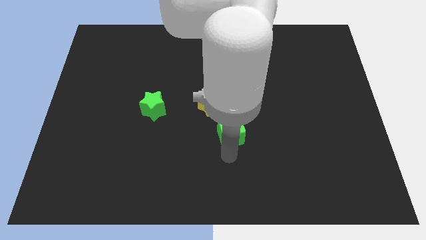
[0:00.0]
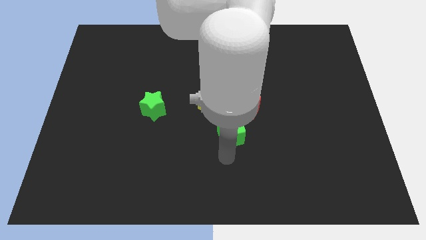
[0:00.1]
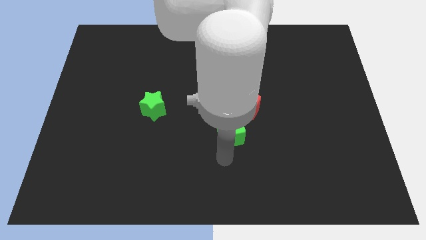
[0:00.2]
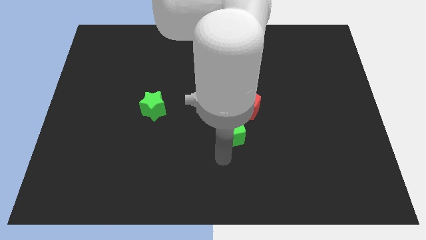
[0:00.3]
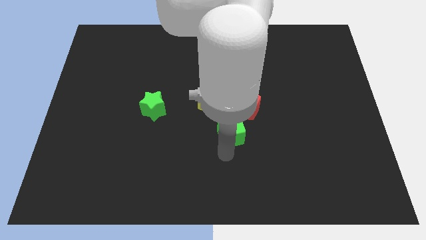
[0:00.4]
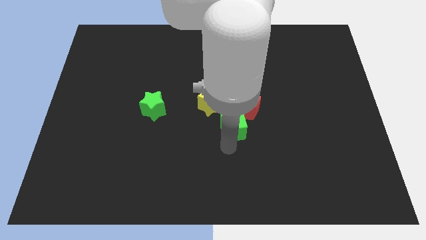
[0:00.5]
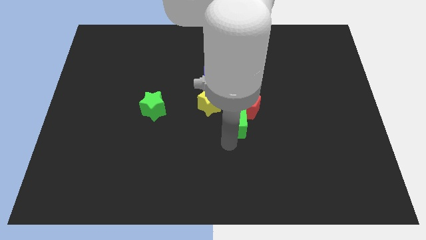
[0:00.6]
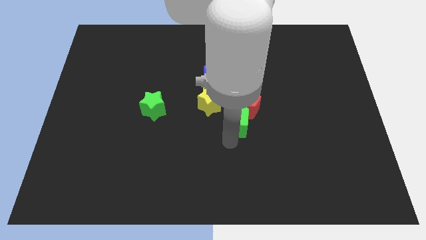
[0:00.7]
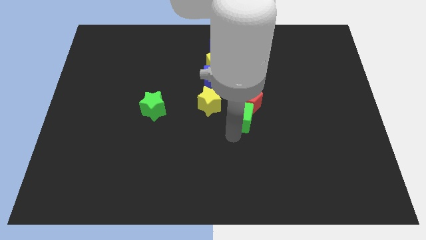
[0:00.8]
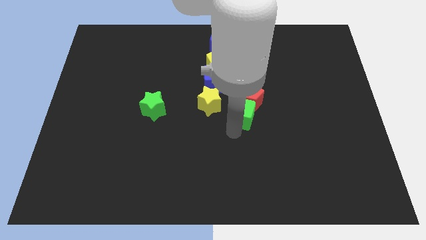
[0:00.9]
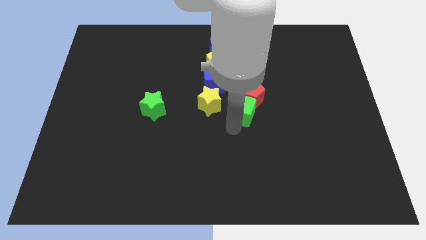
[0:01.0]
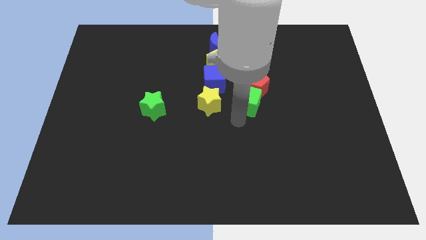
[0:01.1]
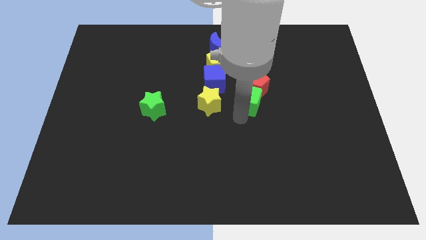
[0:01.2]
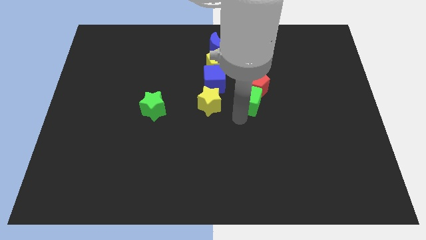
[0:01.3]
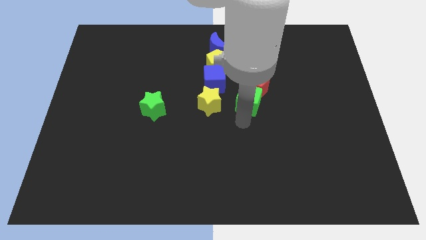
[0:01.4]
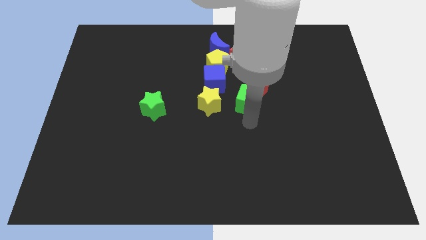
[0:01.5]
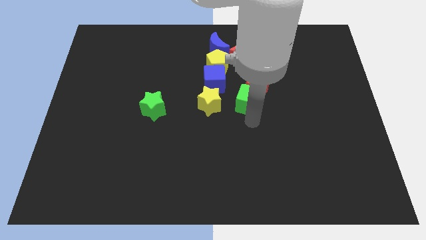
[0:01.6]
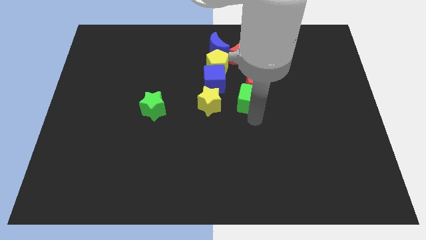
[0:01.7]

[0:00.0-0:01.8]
push the green cube into red pentagon at the bottom

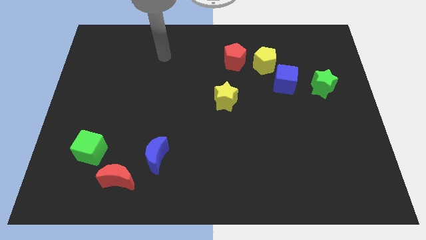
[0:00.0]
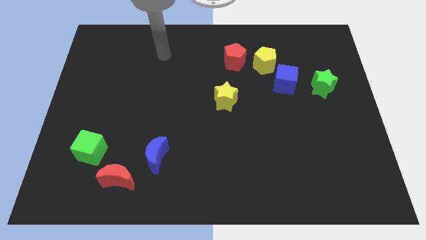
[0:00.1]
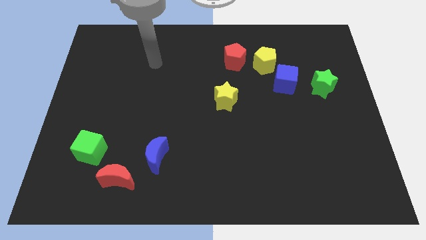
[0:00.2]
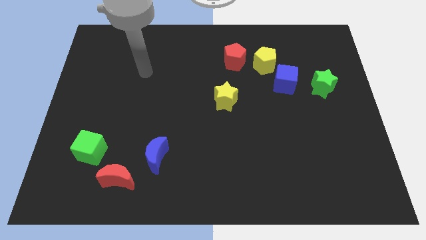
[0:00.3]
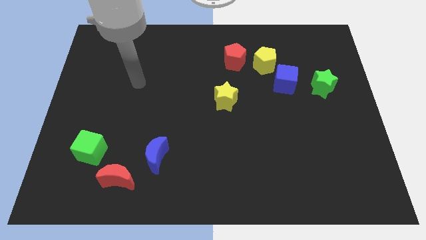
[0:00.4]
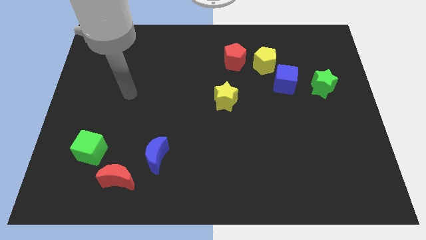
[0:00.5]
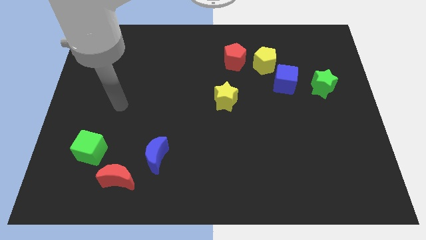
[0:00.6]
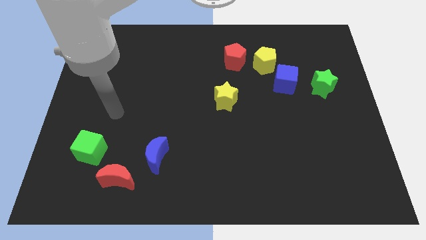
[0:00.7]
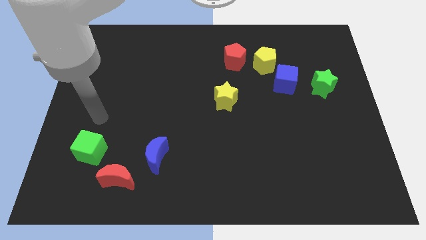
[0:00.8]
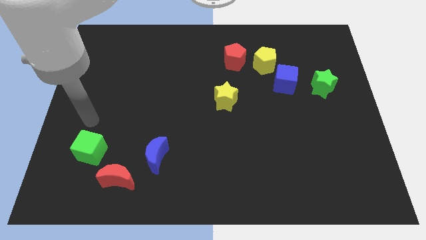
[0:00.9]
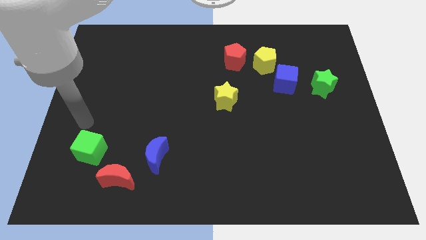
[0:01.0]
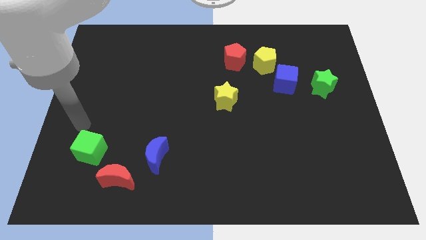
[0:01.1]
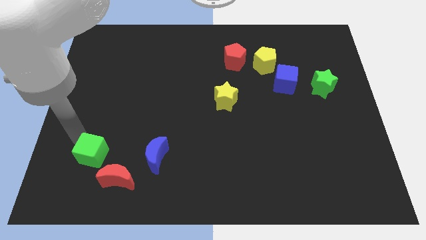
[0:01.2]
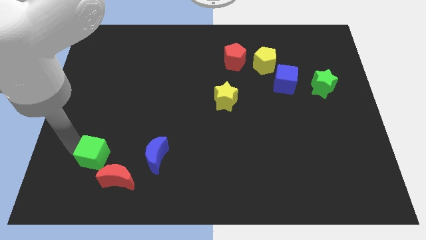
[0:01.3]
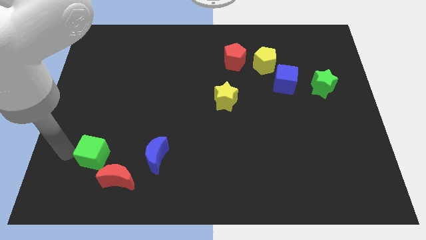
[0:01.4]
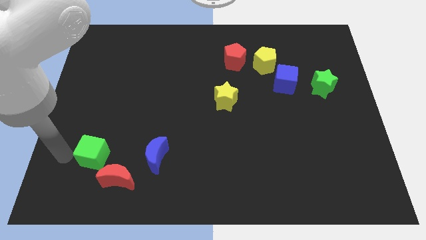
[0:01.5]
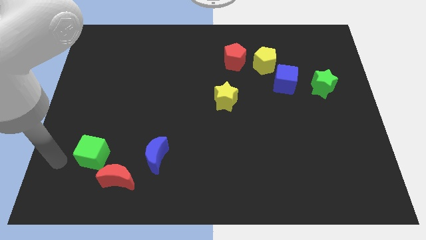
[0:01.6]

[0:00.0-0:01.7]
slightly push the green cube to the left of the red crescent

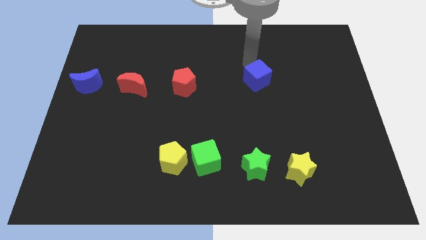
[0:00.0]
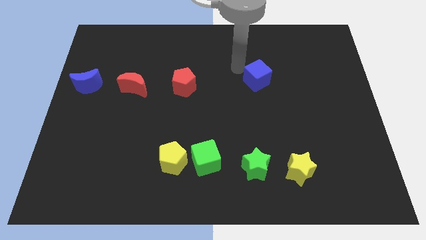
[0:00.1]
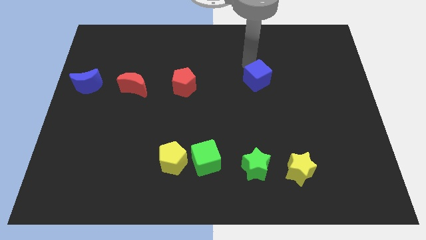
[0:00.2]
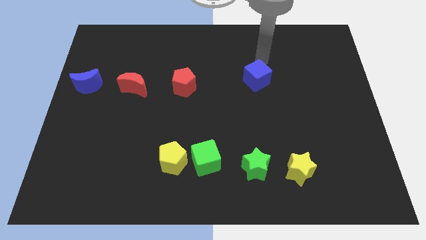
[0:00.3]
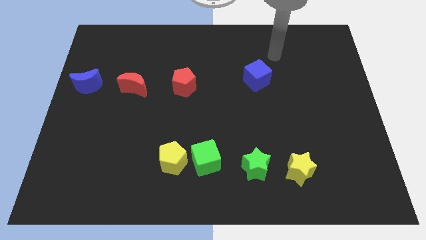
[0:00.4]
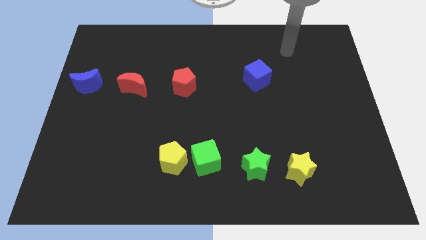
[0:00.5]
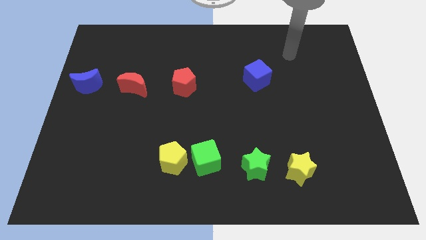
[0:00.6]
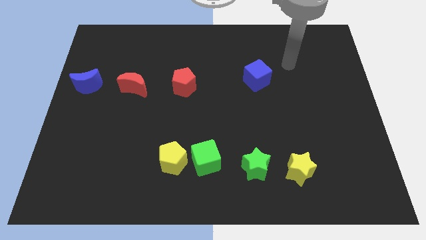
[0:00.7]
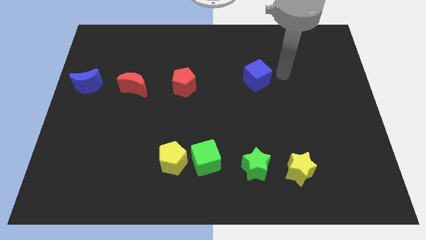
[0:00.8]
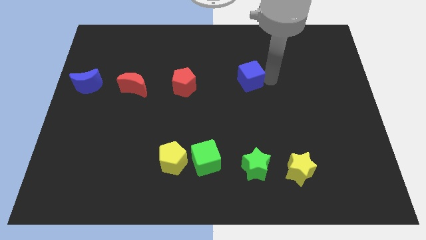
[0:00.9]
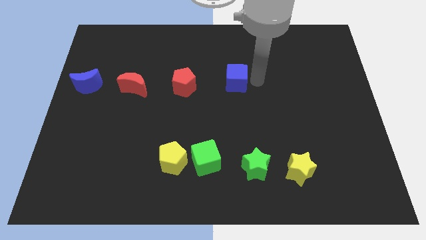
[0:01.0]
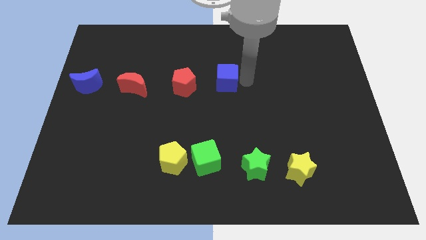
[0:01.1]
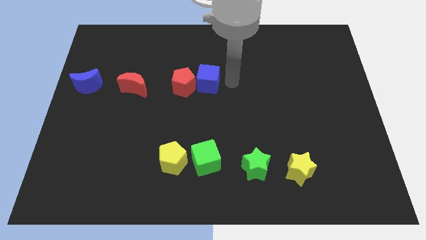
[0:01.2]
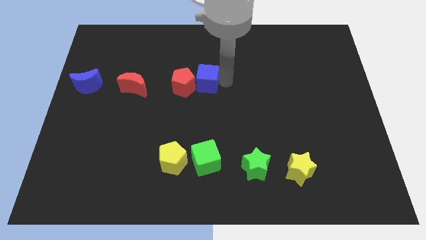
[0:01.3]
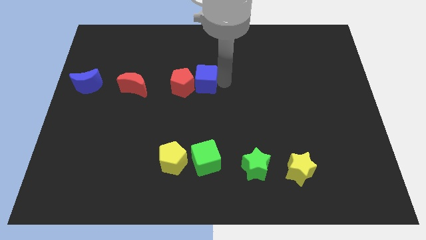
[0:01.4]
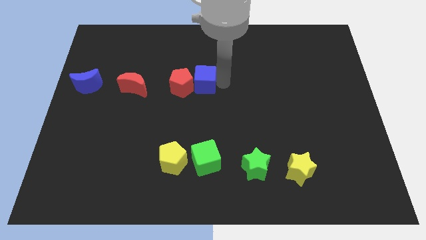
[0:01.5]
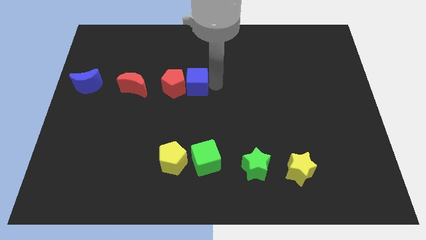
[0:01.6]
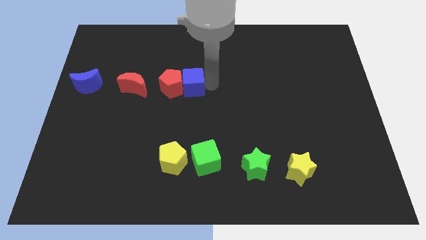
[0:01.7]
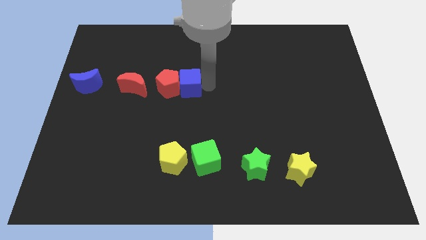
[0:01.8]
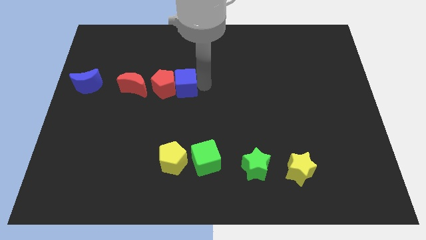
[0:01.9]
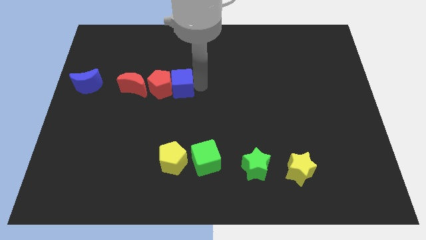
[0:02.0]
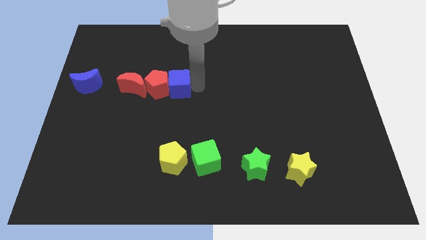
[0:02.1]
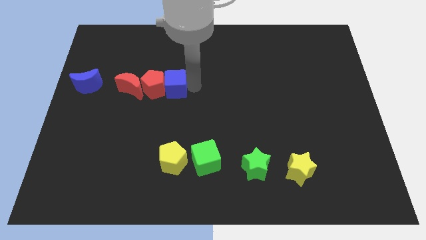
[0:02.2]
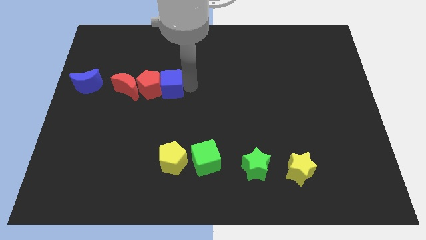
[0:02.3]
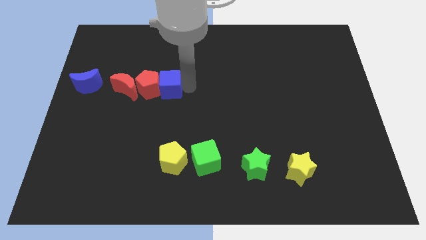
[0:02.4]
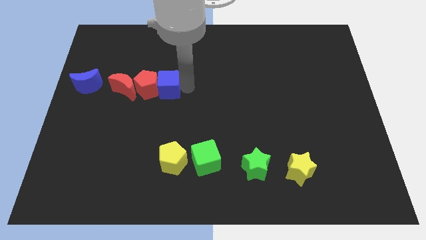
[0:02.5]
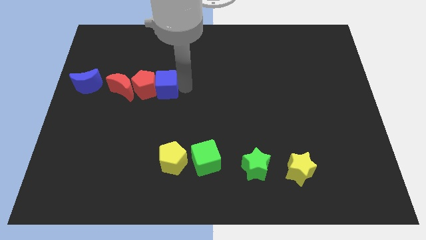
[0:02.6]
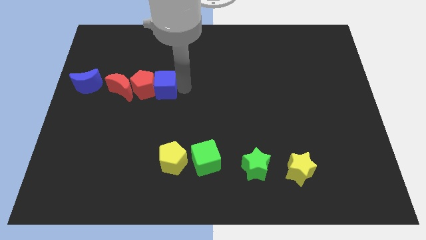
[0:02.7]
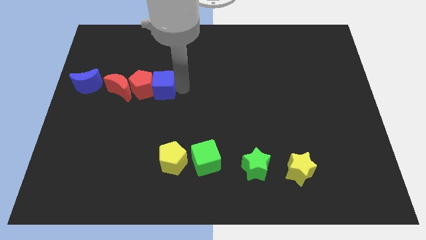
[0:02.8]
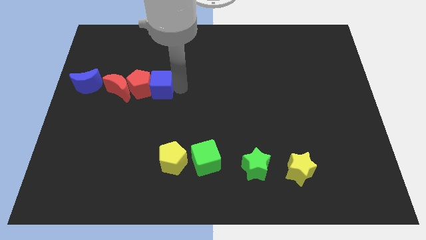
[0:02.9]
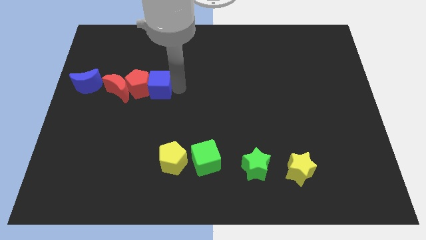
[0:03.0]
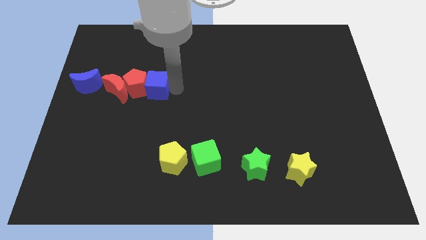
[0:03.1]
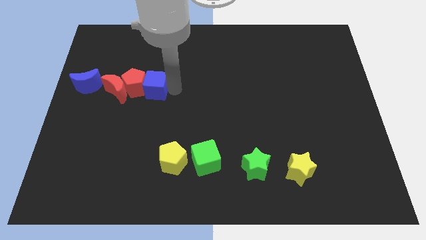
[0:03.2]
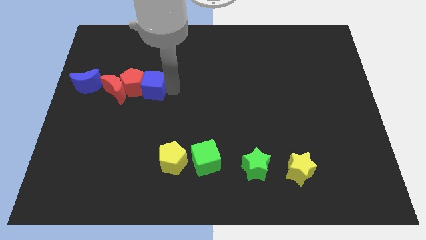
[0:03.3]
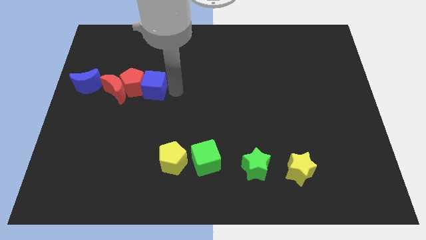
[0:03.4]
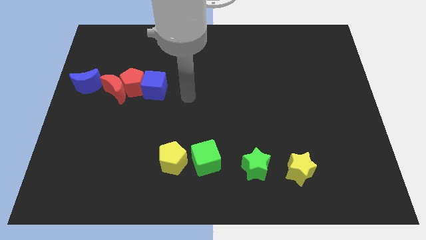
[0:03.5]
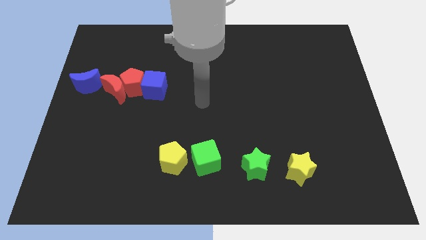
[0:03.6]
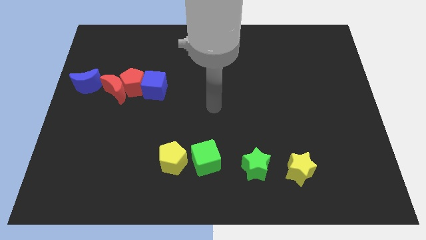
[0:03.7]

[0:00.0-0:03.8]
move the blue cube into the red pentagon

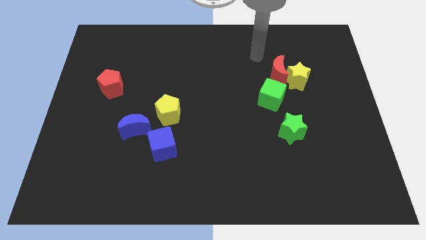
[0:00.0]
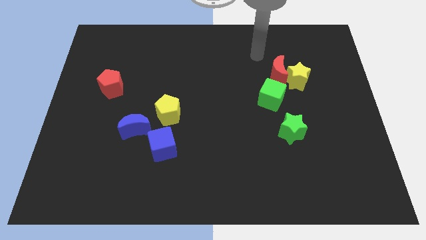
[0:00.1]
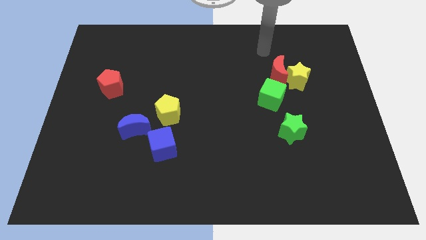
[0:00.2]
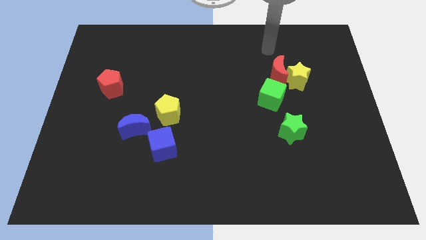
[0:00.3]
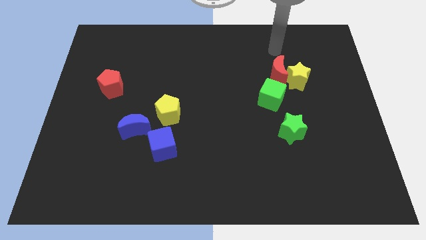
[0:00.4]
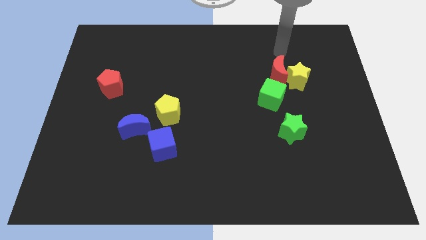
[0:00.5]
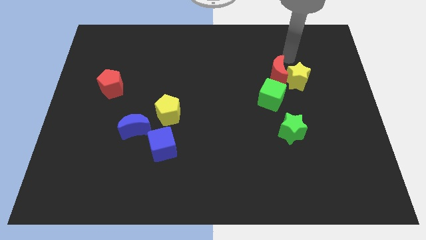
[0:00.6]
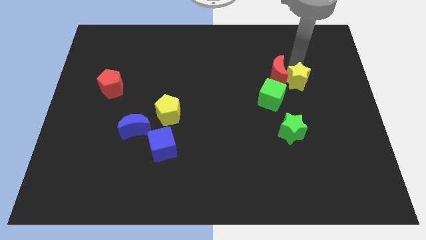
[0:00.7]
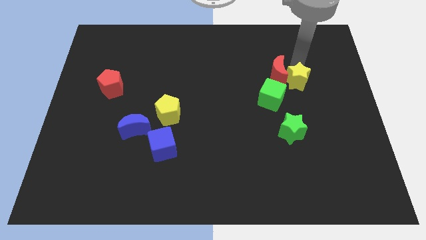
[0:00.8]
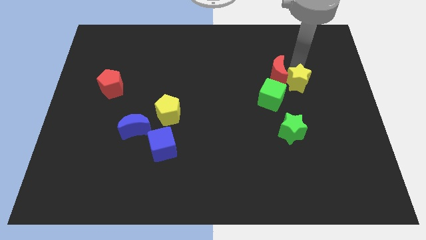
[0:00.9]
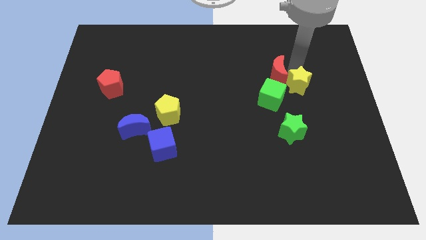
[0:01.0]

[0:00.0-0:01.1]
push the yellow star slightly to the bottom

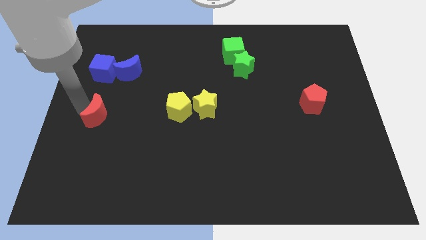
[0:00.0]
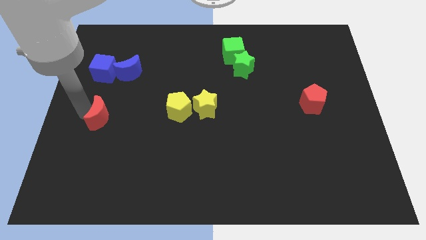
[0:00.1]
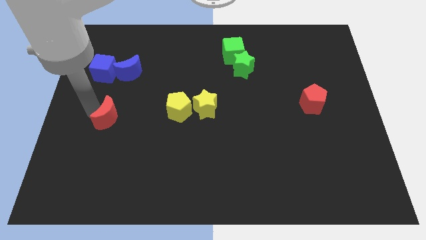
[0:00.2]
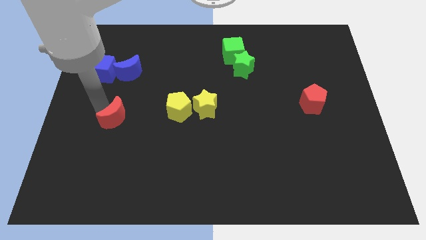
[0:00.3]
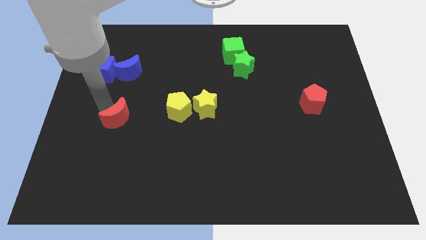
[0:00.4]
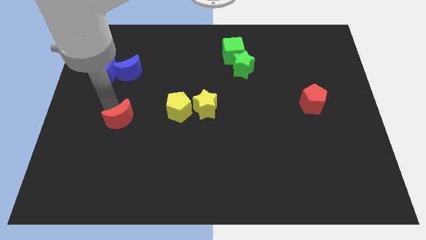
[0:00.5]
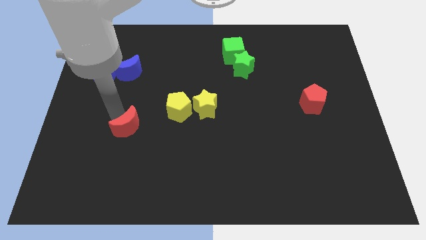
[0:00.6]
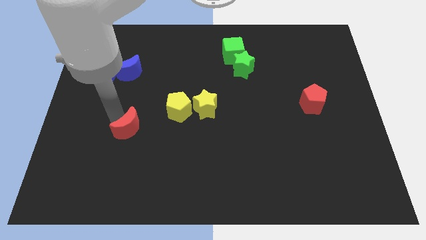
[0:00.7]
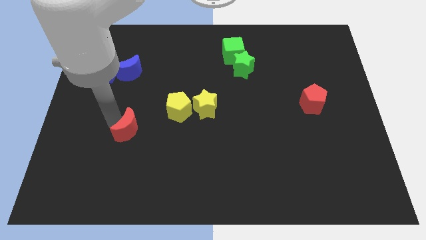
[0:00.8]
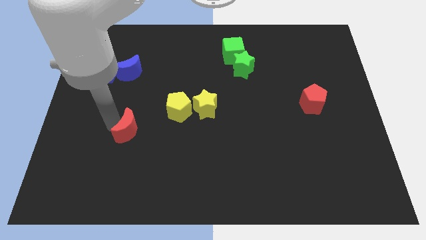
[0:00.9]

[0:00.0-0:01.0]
push the red crescent downwards of the board
